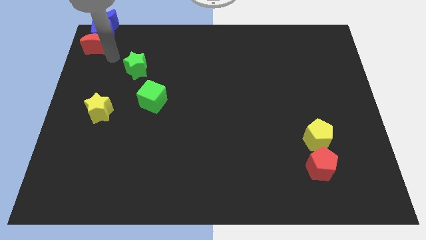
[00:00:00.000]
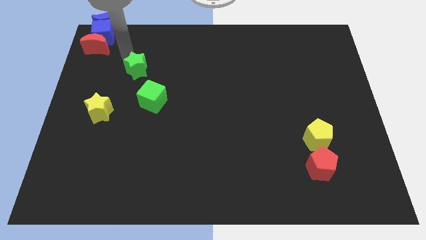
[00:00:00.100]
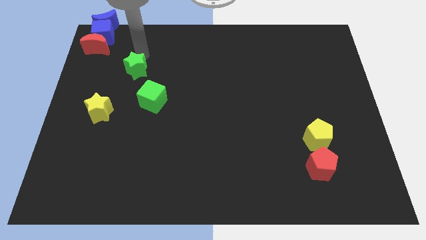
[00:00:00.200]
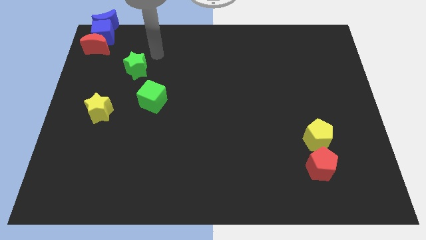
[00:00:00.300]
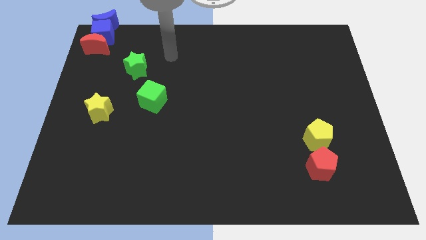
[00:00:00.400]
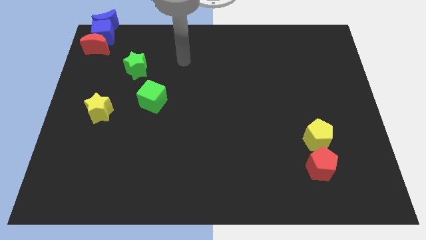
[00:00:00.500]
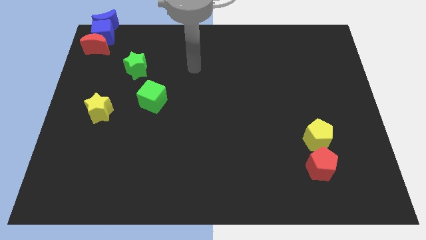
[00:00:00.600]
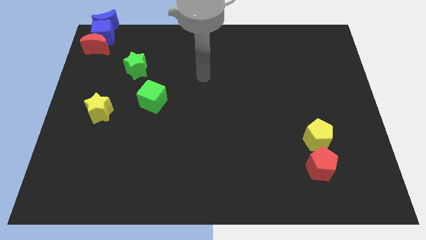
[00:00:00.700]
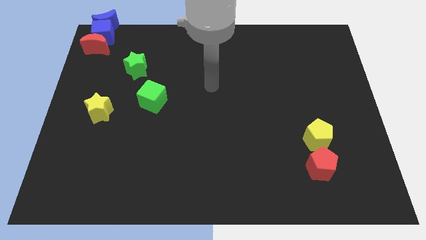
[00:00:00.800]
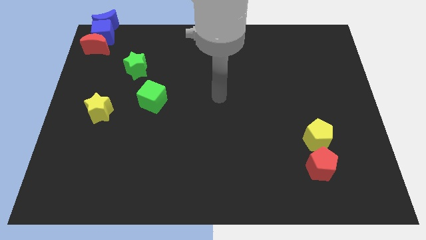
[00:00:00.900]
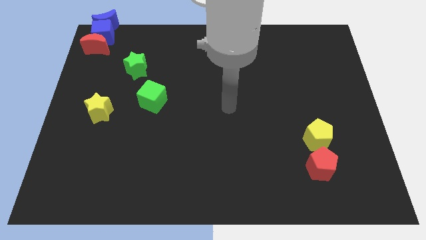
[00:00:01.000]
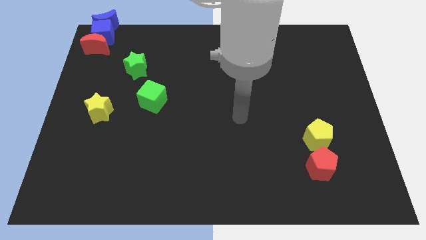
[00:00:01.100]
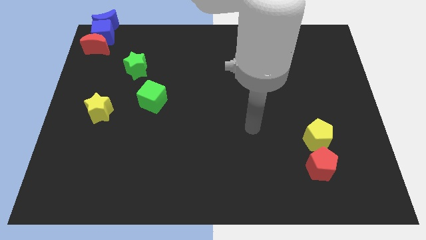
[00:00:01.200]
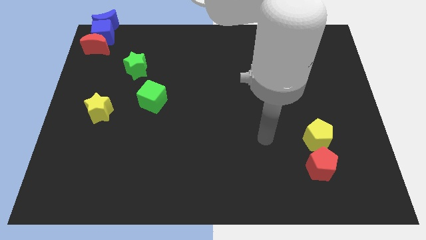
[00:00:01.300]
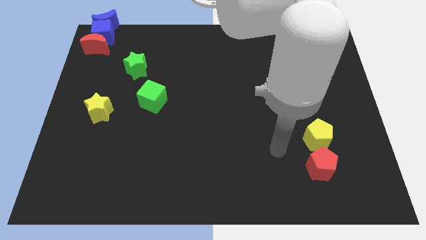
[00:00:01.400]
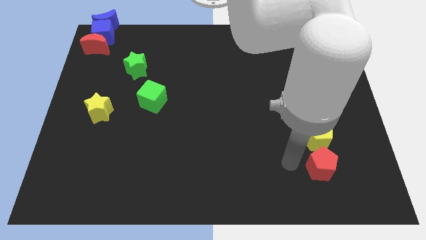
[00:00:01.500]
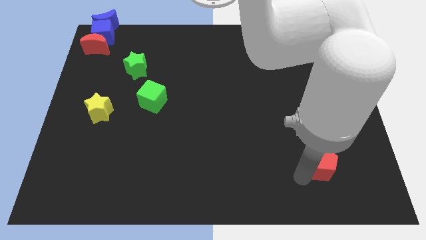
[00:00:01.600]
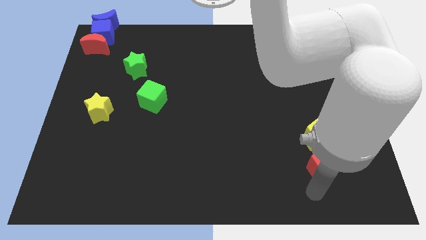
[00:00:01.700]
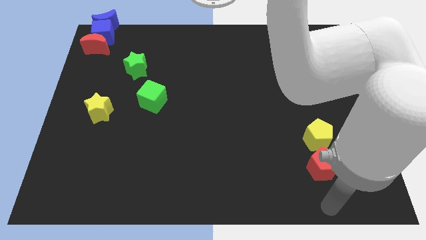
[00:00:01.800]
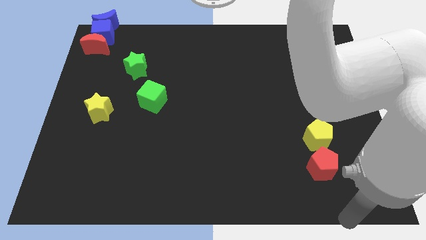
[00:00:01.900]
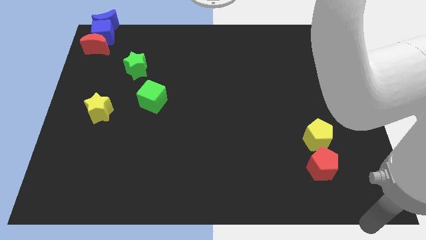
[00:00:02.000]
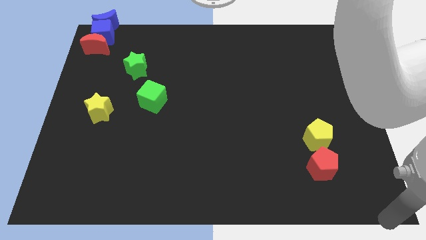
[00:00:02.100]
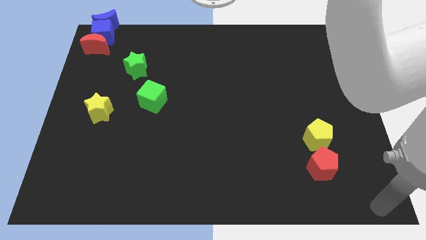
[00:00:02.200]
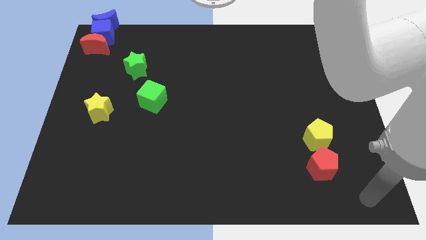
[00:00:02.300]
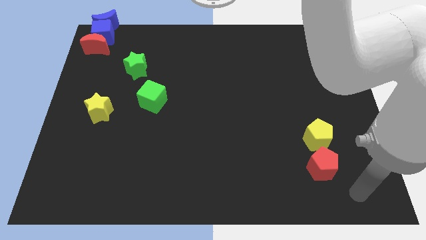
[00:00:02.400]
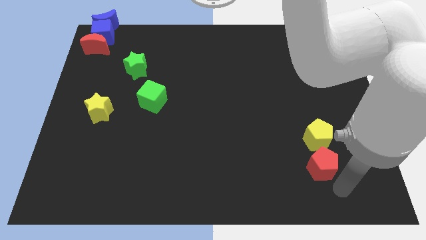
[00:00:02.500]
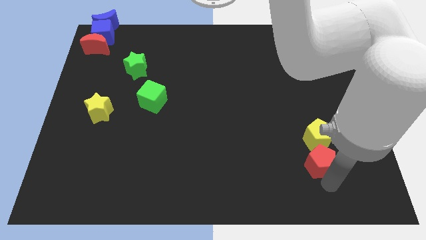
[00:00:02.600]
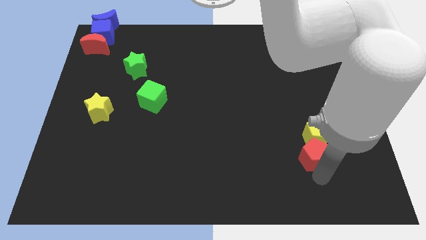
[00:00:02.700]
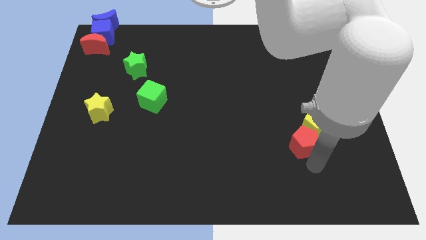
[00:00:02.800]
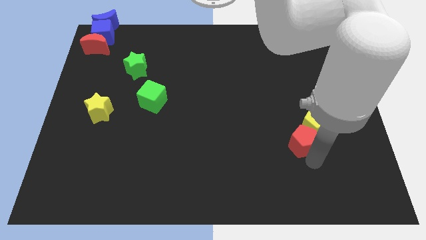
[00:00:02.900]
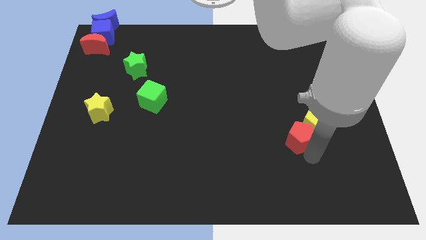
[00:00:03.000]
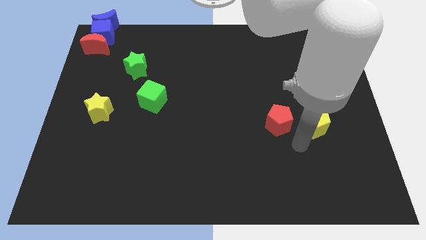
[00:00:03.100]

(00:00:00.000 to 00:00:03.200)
push red pentagon beside yellow pentagon

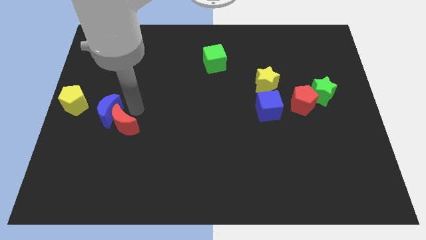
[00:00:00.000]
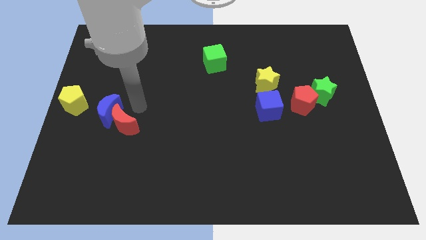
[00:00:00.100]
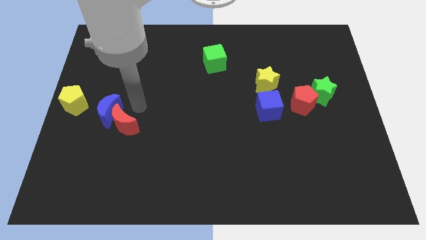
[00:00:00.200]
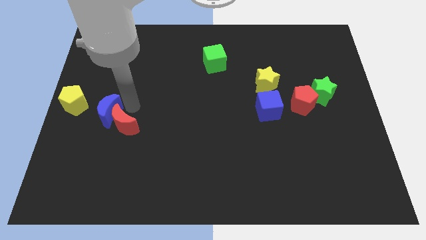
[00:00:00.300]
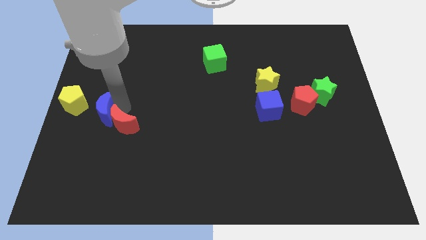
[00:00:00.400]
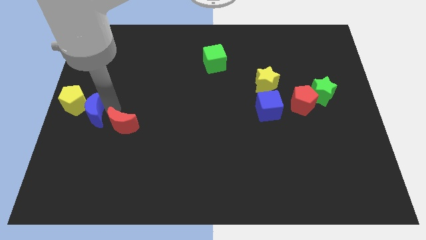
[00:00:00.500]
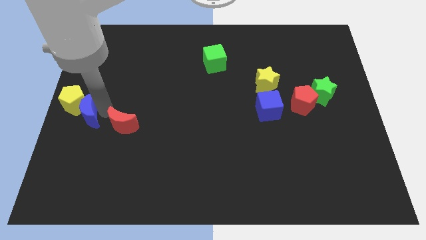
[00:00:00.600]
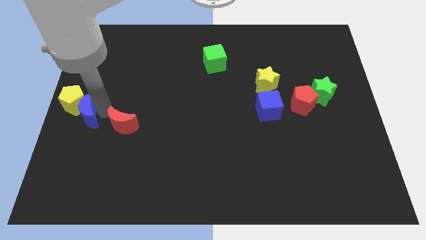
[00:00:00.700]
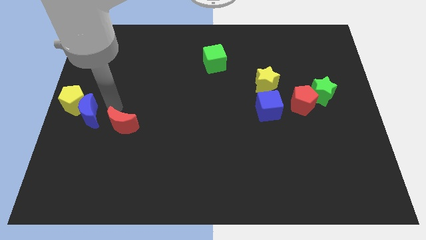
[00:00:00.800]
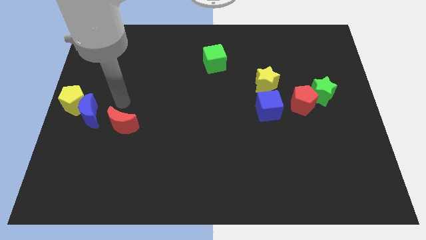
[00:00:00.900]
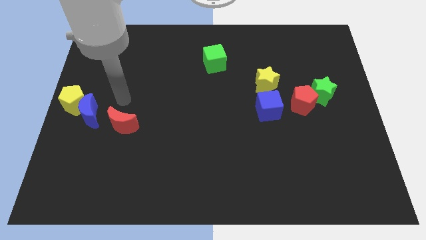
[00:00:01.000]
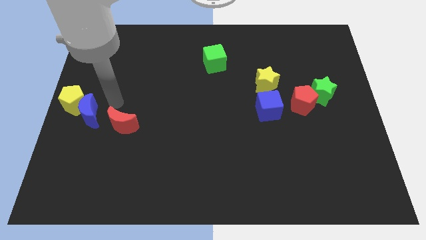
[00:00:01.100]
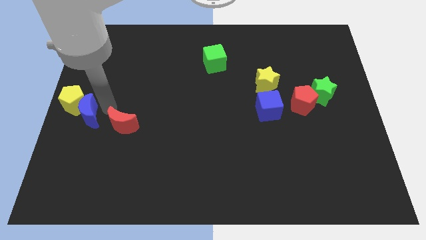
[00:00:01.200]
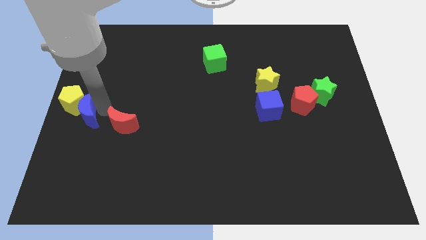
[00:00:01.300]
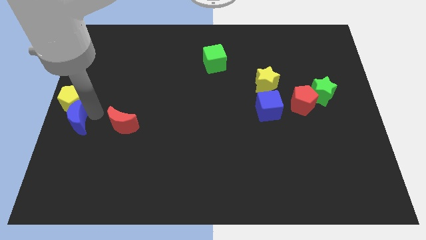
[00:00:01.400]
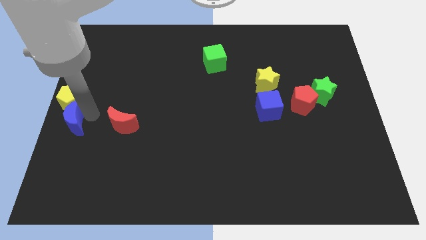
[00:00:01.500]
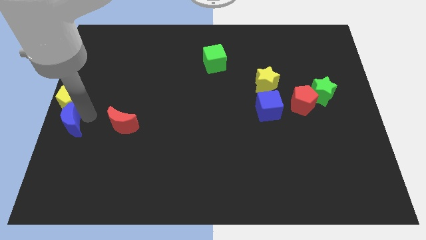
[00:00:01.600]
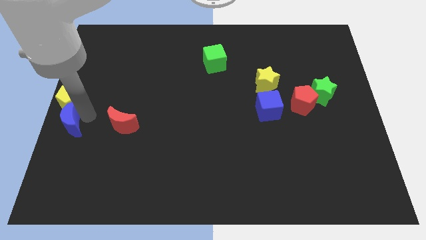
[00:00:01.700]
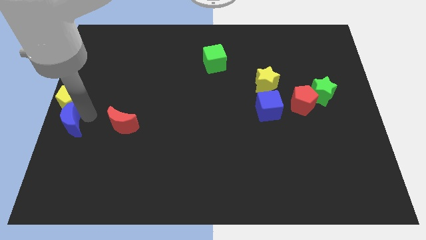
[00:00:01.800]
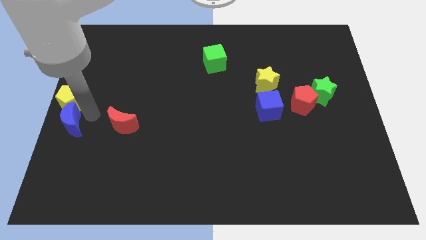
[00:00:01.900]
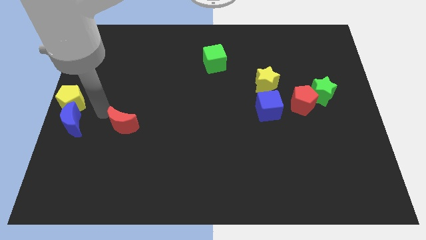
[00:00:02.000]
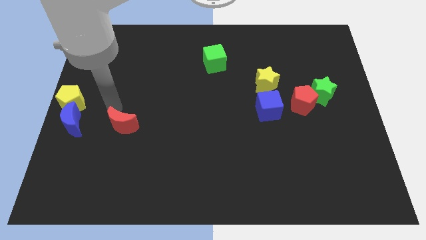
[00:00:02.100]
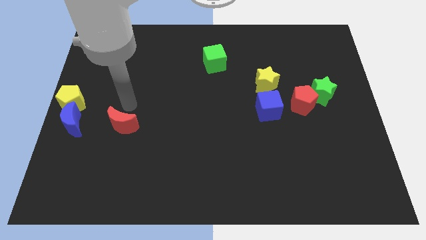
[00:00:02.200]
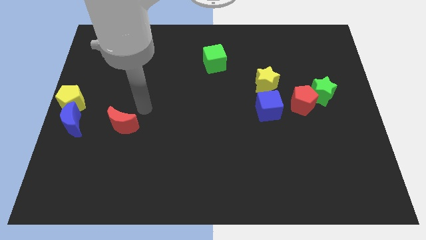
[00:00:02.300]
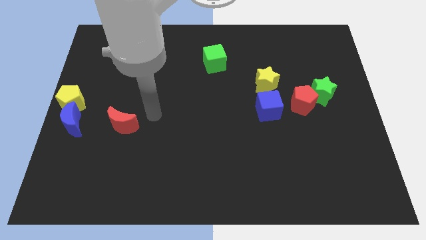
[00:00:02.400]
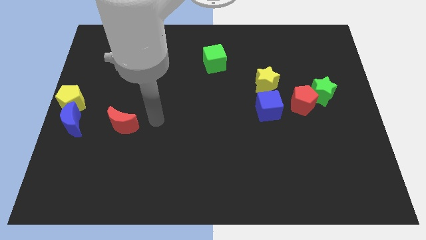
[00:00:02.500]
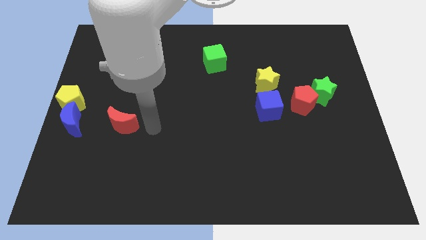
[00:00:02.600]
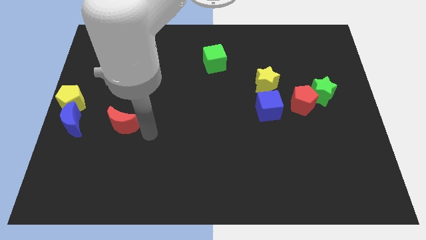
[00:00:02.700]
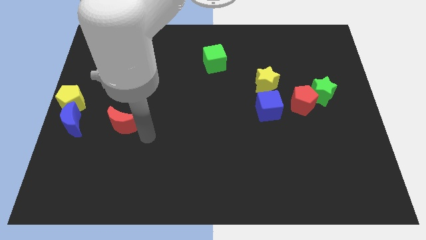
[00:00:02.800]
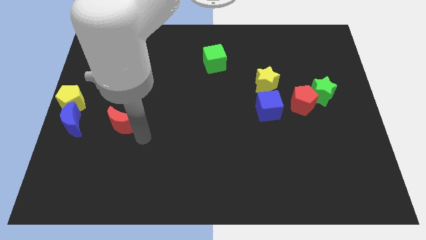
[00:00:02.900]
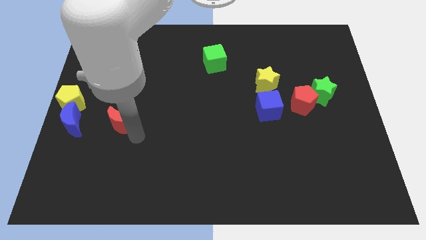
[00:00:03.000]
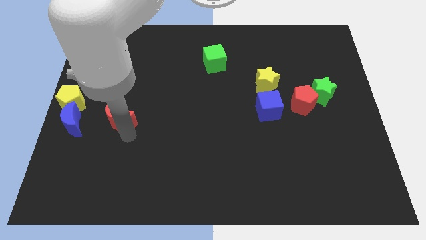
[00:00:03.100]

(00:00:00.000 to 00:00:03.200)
slightly move the blue crescent to left side

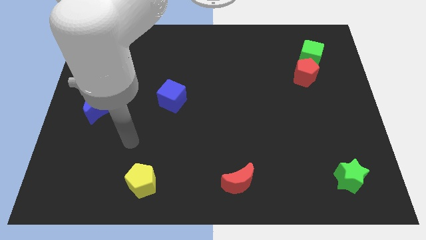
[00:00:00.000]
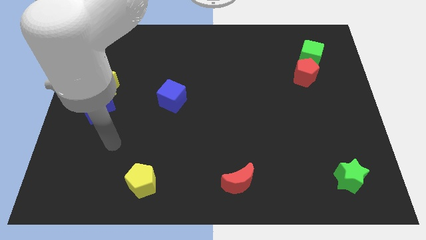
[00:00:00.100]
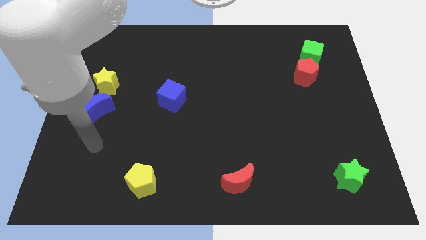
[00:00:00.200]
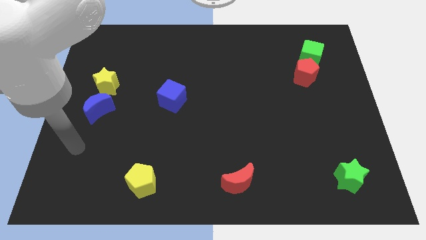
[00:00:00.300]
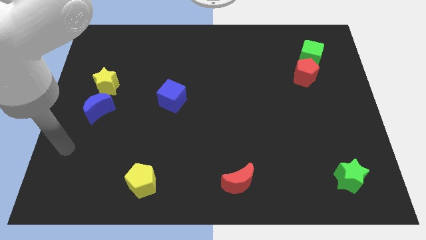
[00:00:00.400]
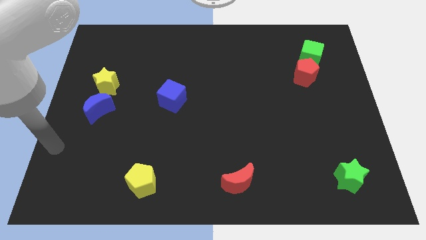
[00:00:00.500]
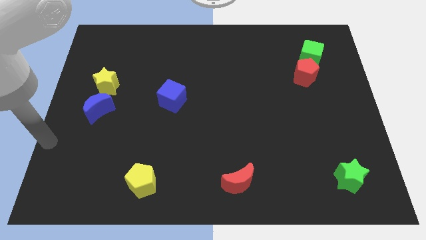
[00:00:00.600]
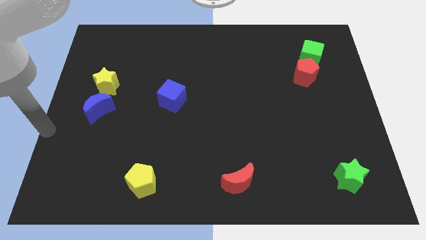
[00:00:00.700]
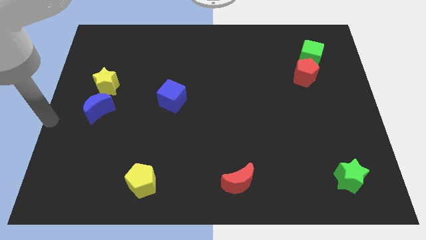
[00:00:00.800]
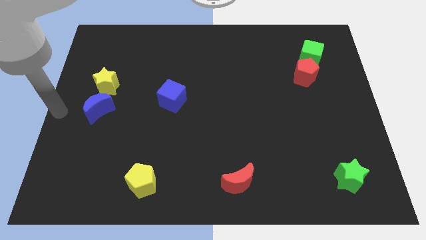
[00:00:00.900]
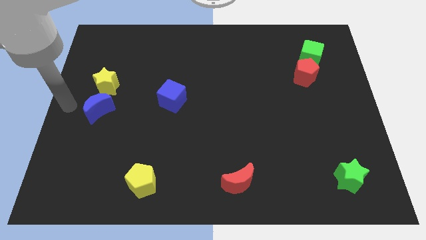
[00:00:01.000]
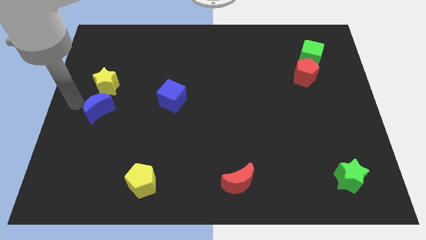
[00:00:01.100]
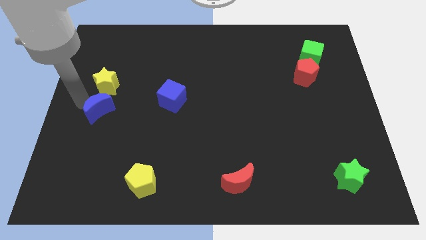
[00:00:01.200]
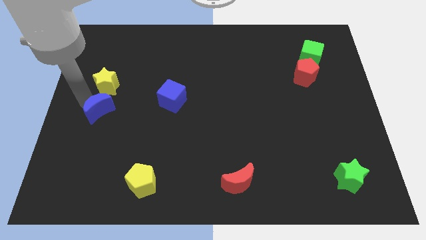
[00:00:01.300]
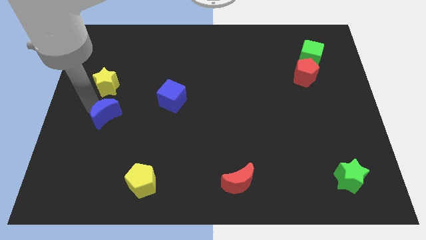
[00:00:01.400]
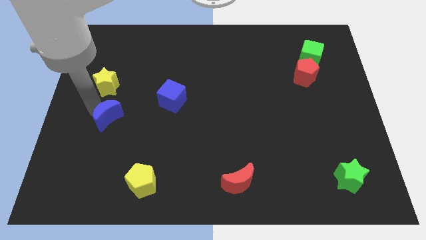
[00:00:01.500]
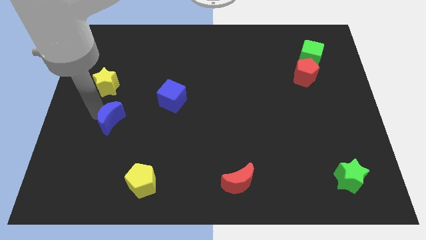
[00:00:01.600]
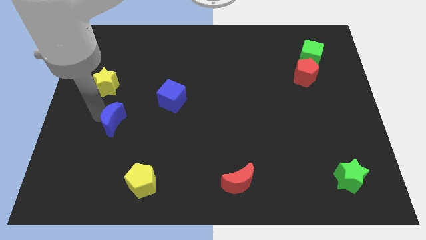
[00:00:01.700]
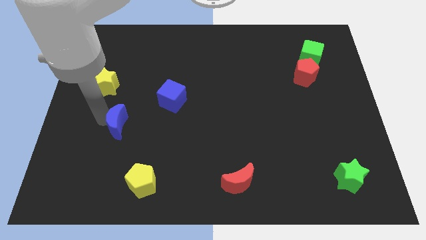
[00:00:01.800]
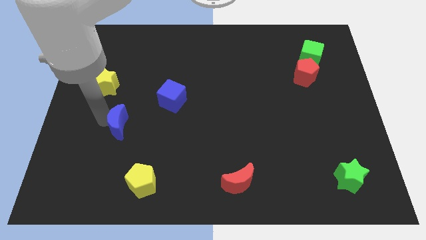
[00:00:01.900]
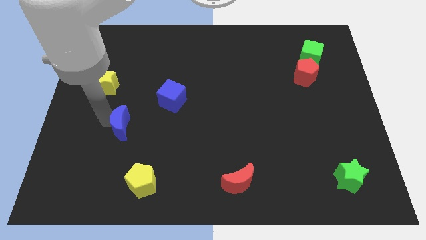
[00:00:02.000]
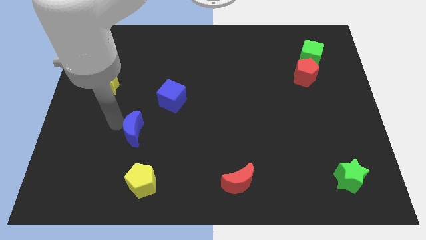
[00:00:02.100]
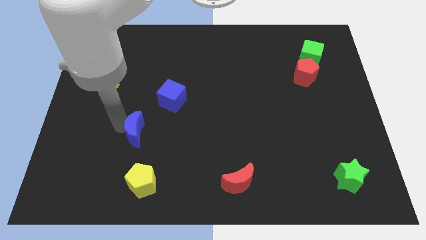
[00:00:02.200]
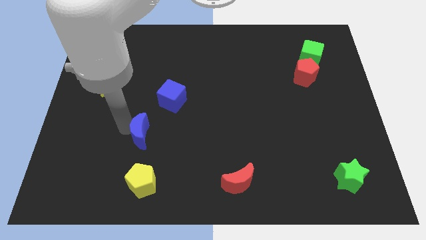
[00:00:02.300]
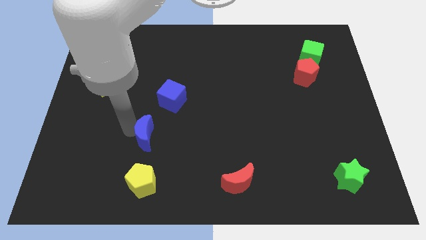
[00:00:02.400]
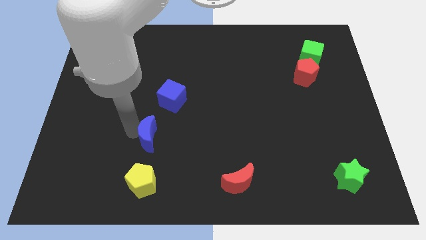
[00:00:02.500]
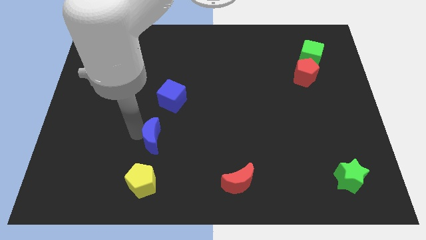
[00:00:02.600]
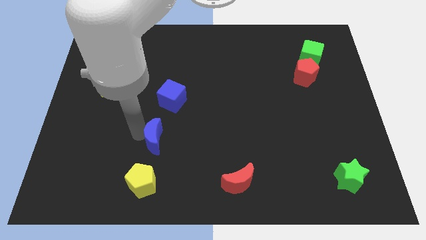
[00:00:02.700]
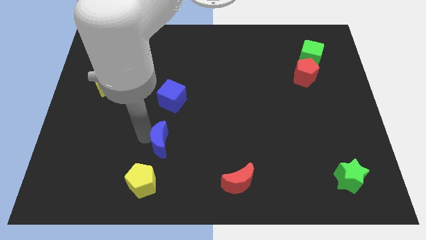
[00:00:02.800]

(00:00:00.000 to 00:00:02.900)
push blue crescent in between yellow pentagon and blue cube
